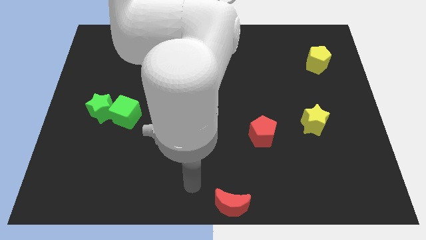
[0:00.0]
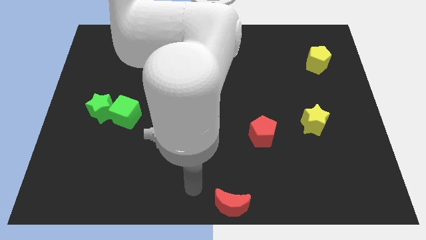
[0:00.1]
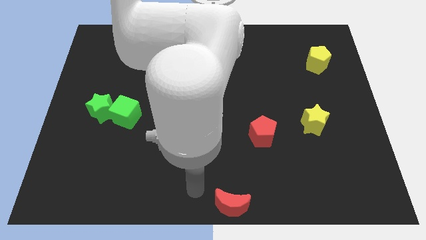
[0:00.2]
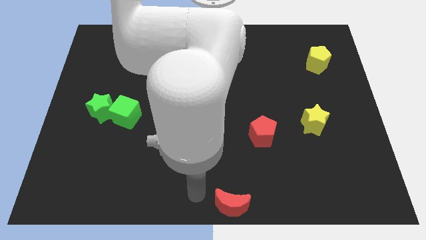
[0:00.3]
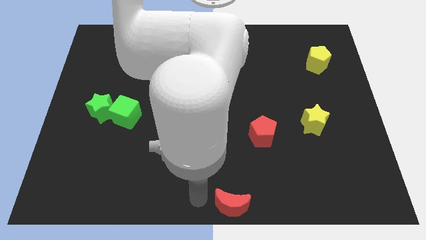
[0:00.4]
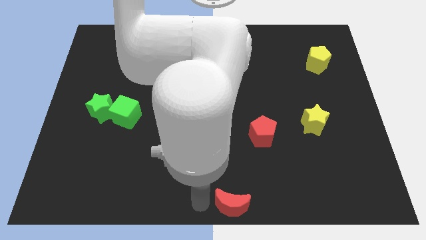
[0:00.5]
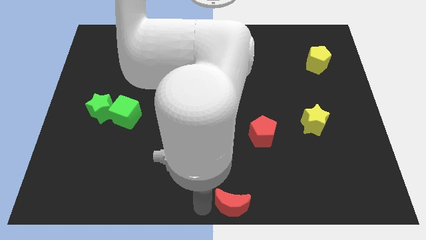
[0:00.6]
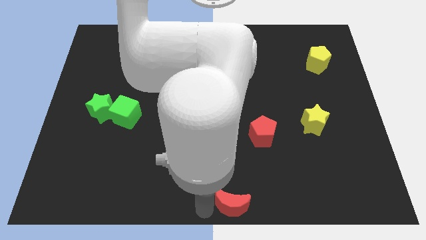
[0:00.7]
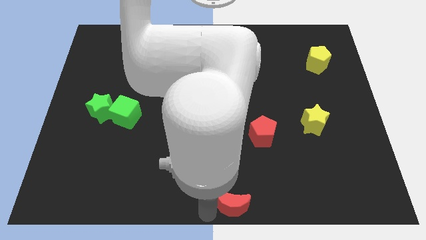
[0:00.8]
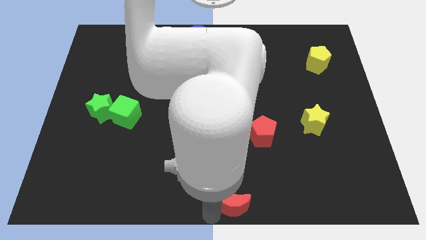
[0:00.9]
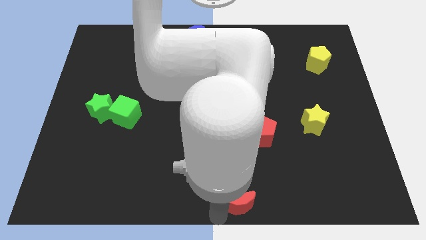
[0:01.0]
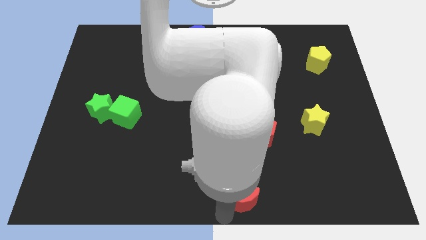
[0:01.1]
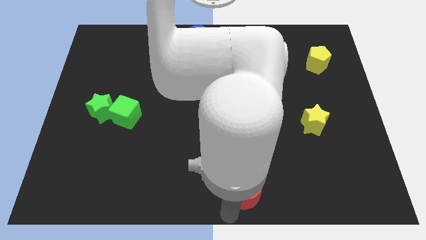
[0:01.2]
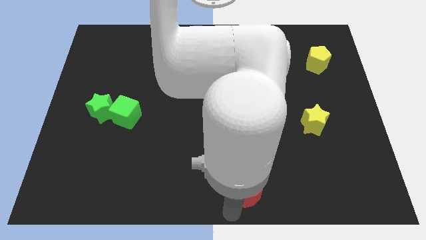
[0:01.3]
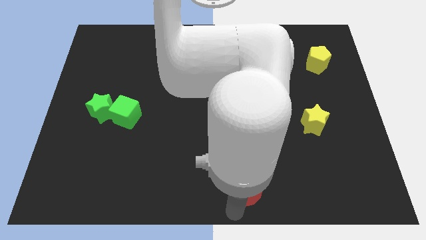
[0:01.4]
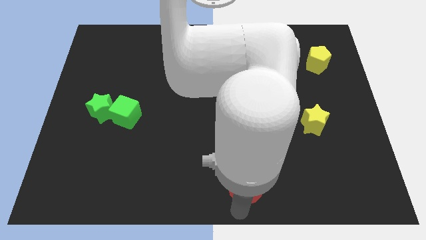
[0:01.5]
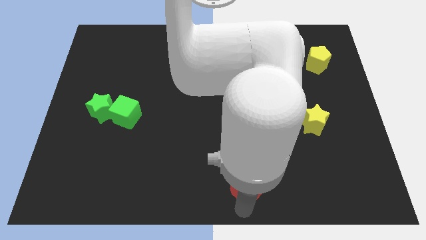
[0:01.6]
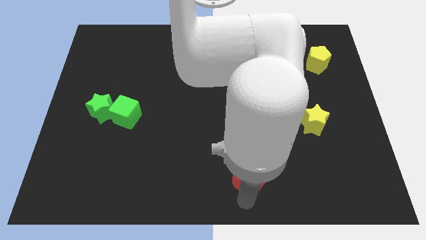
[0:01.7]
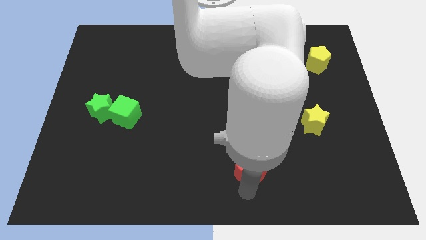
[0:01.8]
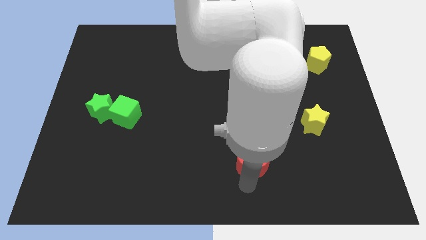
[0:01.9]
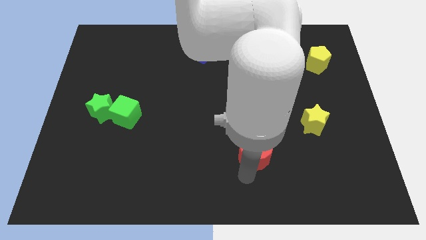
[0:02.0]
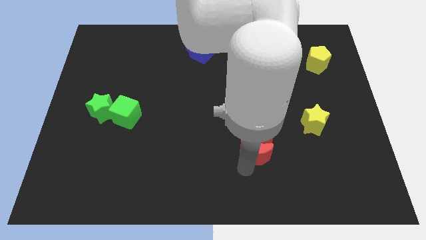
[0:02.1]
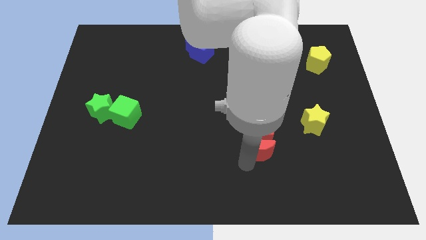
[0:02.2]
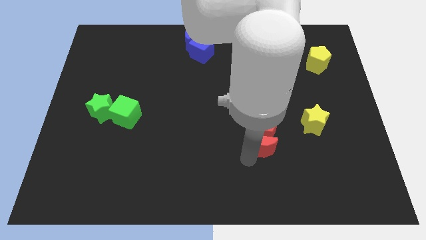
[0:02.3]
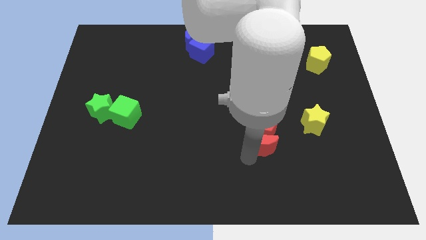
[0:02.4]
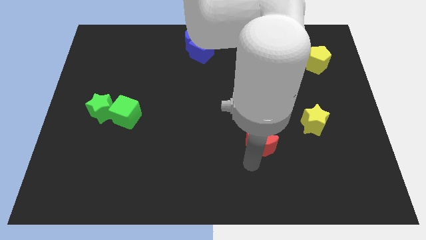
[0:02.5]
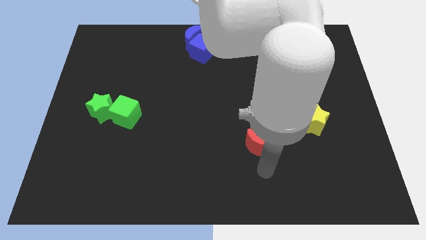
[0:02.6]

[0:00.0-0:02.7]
push red crescent below pentagon

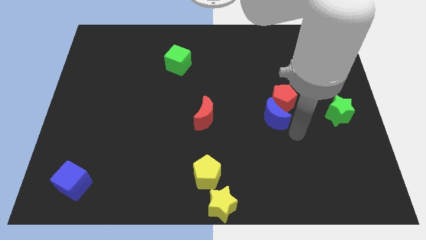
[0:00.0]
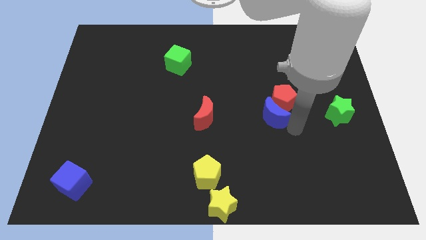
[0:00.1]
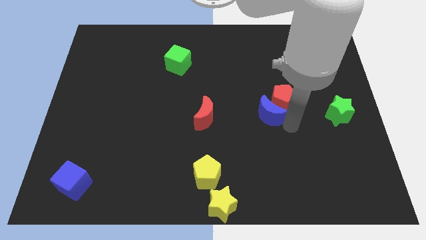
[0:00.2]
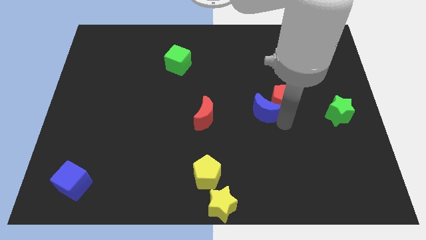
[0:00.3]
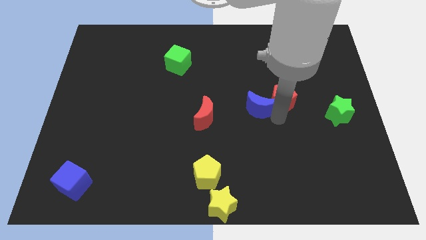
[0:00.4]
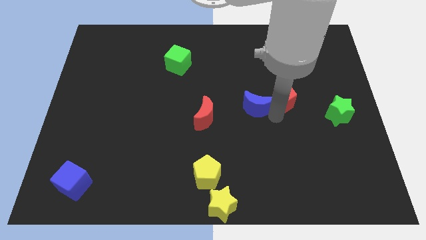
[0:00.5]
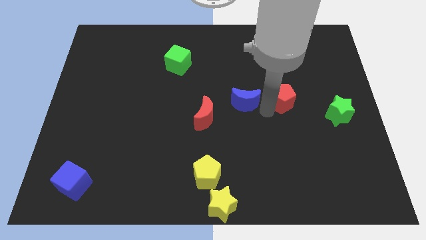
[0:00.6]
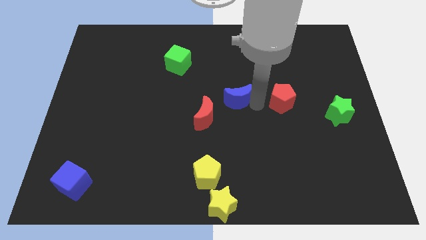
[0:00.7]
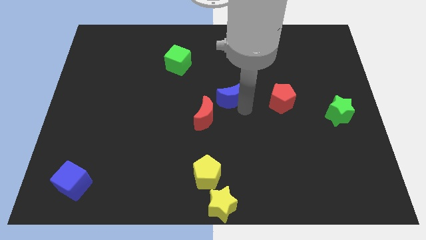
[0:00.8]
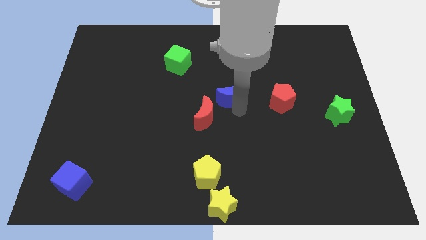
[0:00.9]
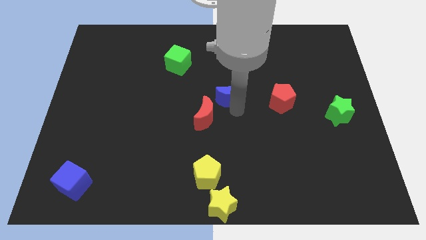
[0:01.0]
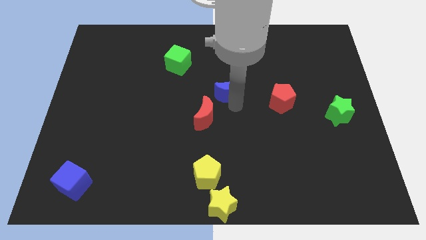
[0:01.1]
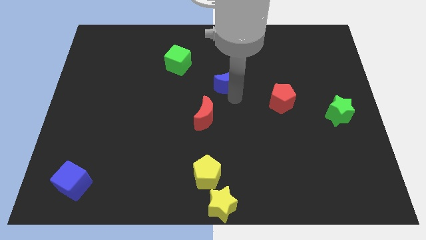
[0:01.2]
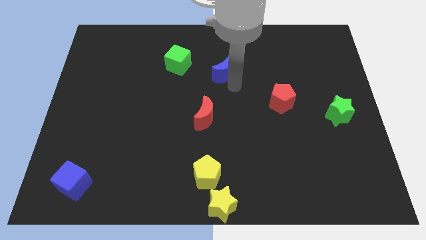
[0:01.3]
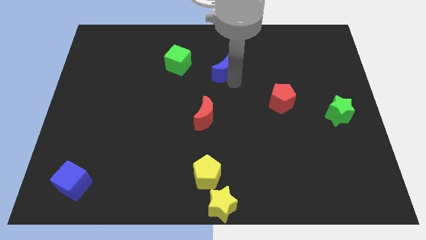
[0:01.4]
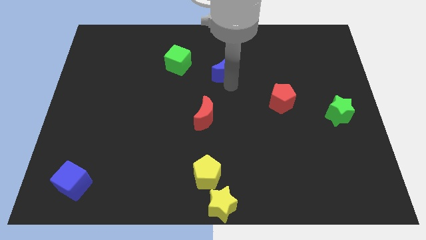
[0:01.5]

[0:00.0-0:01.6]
separate the blue crescent from the red pentagon

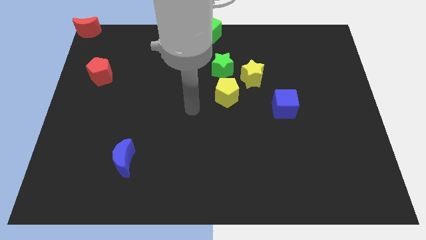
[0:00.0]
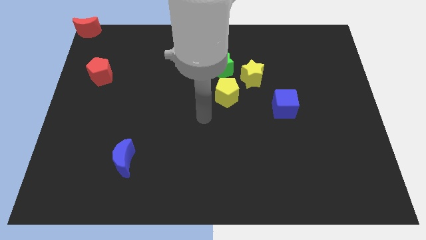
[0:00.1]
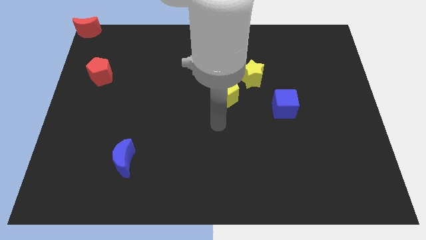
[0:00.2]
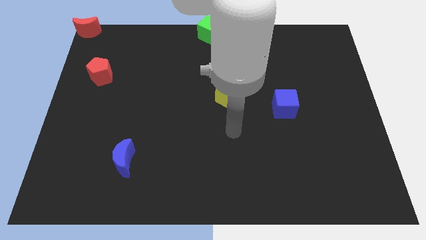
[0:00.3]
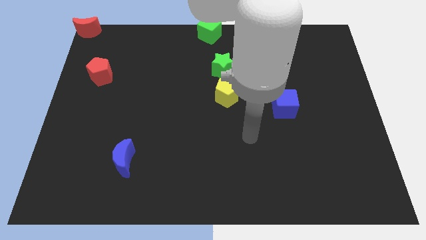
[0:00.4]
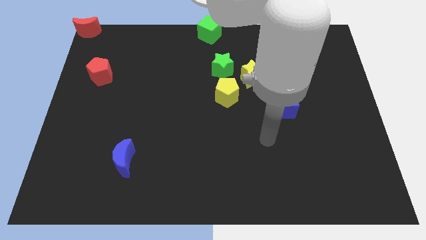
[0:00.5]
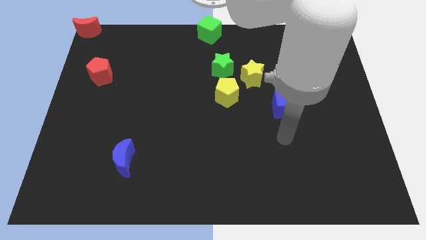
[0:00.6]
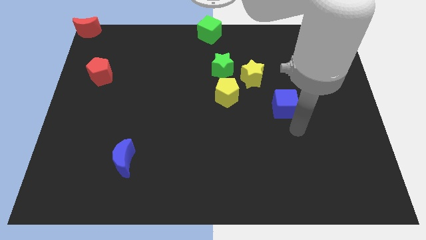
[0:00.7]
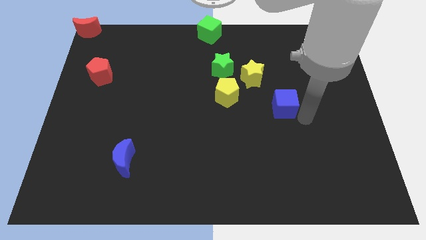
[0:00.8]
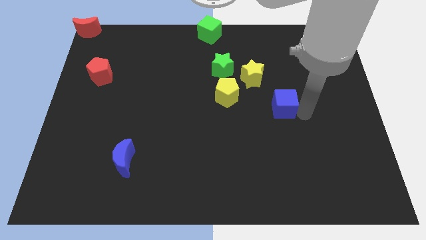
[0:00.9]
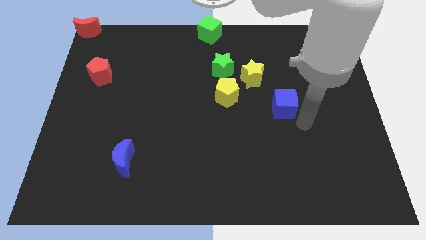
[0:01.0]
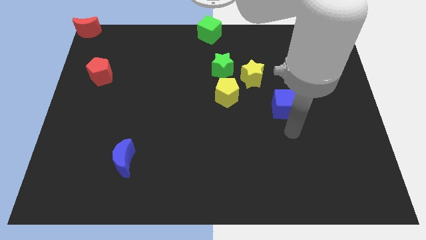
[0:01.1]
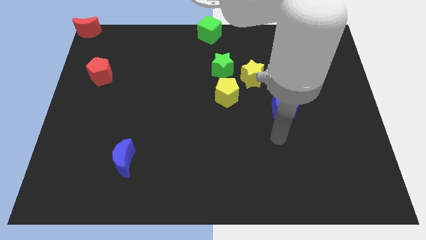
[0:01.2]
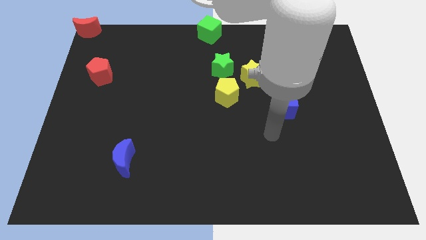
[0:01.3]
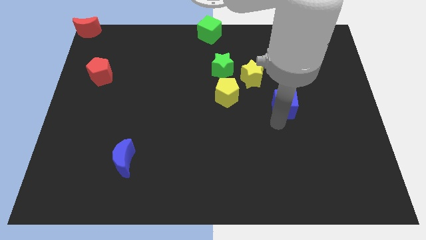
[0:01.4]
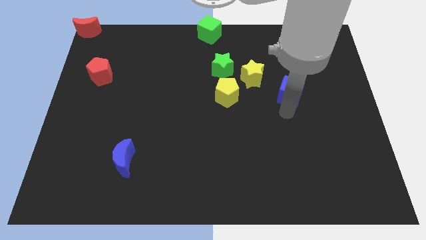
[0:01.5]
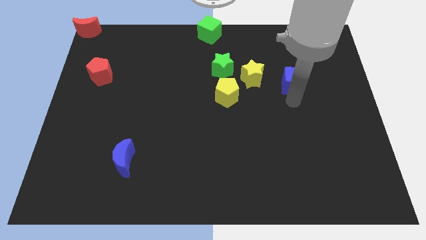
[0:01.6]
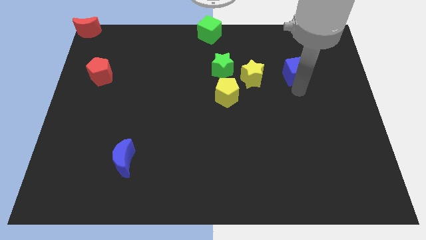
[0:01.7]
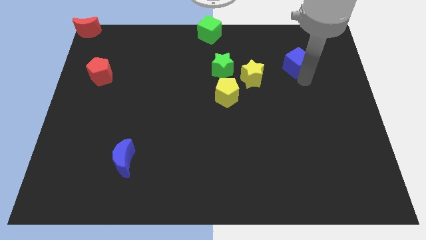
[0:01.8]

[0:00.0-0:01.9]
place blue cube right to yellow star

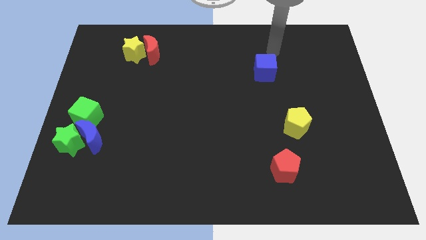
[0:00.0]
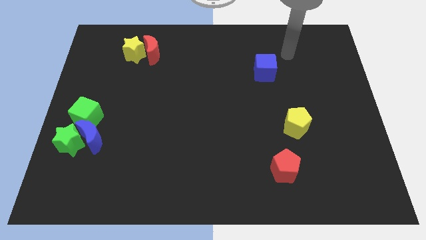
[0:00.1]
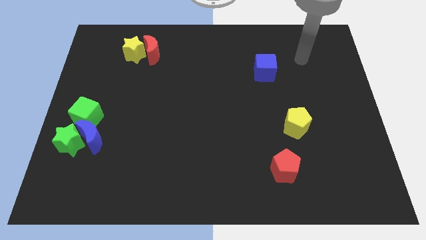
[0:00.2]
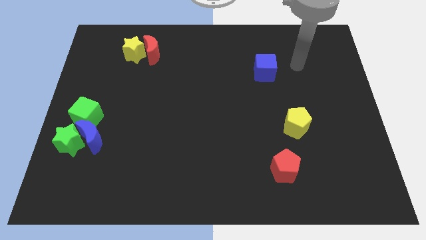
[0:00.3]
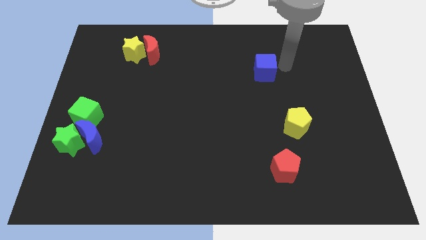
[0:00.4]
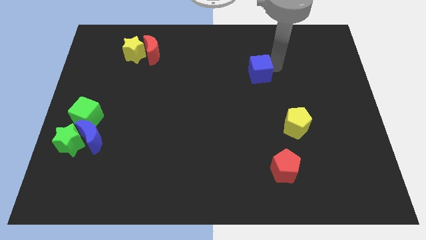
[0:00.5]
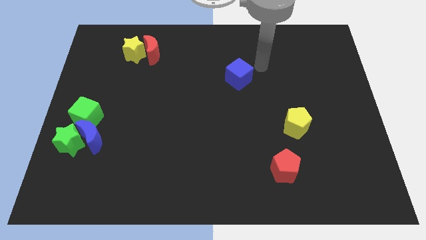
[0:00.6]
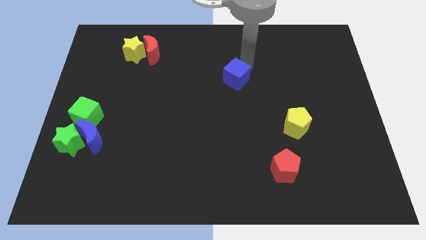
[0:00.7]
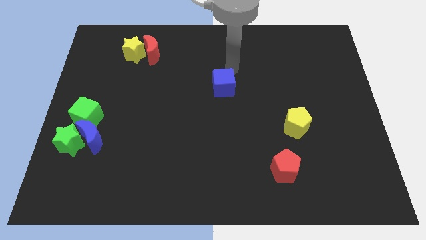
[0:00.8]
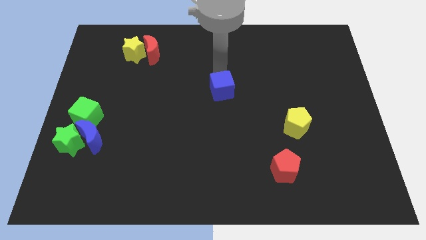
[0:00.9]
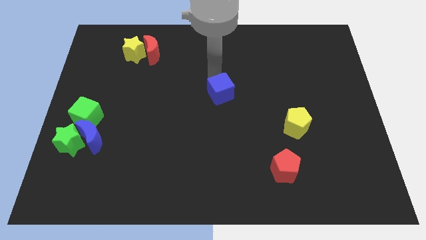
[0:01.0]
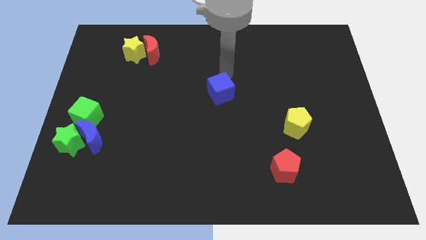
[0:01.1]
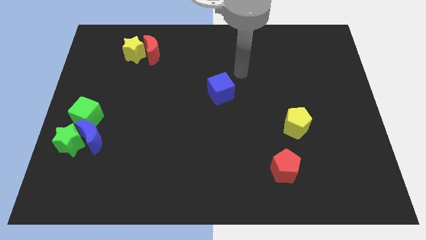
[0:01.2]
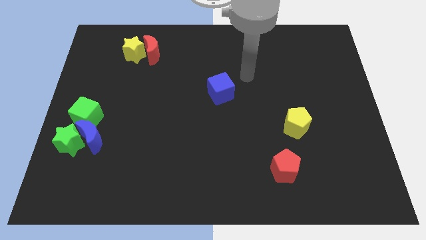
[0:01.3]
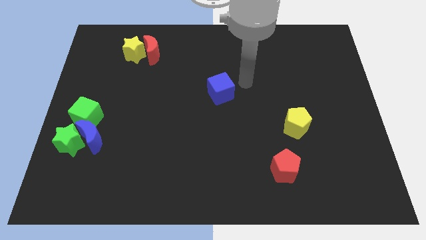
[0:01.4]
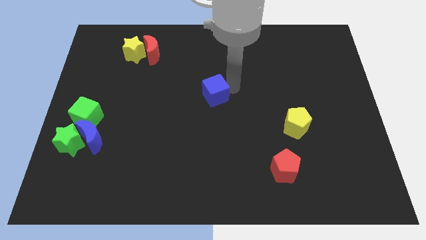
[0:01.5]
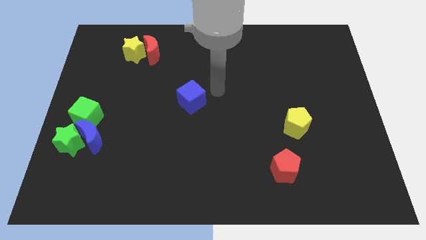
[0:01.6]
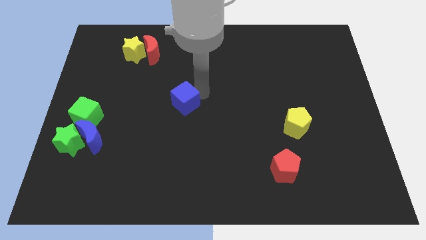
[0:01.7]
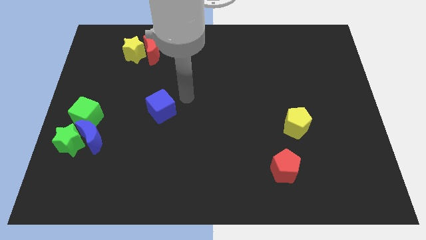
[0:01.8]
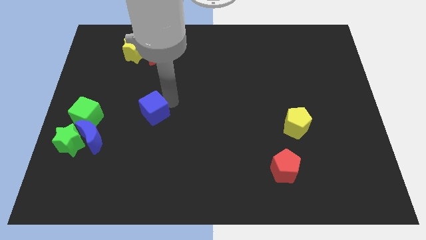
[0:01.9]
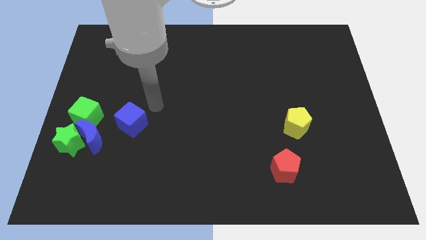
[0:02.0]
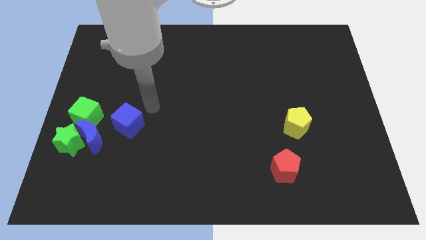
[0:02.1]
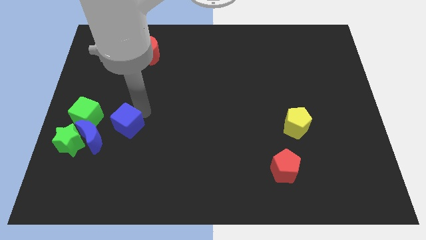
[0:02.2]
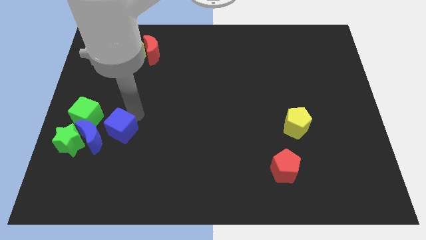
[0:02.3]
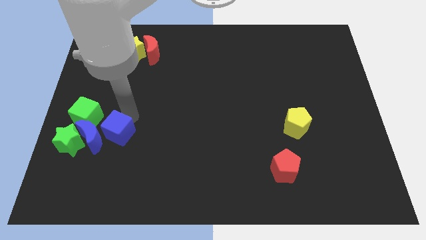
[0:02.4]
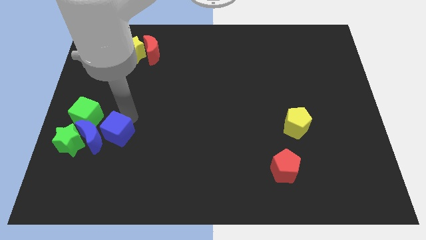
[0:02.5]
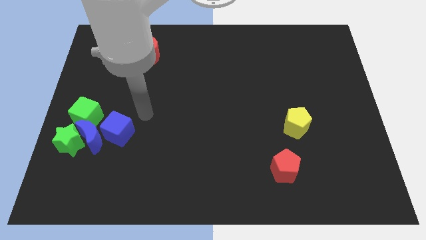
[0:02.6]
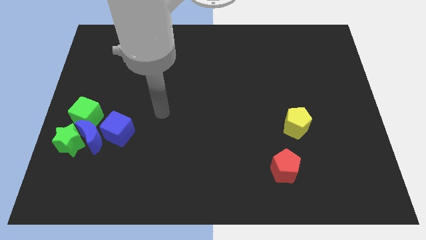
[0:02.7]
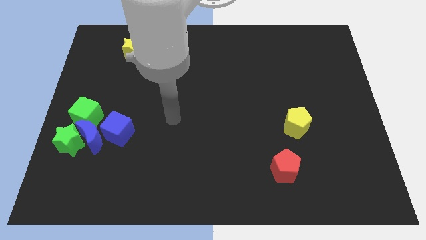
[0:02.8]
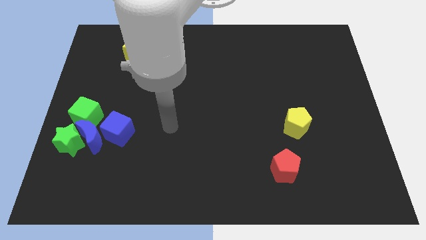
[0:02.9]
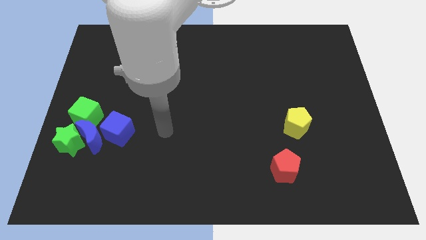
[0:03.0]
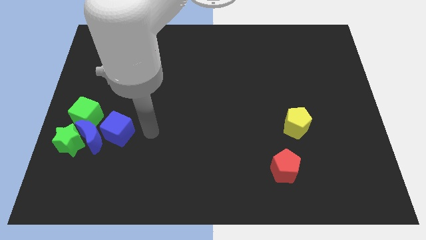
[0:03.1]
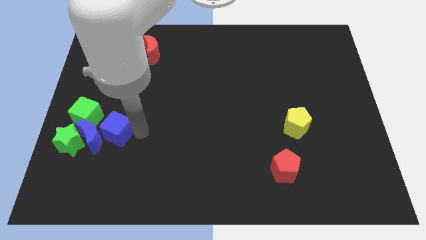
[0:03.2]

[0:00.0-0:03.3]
move the blue cube towards the blue moon
